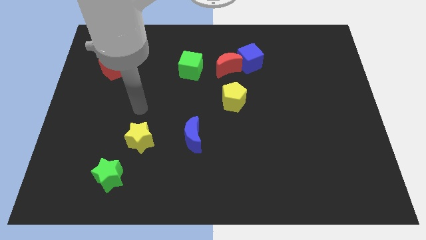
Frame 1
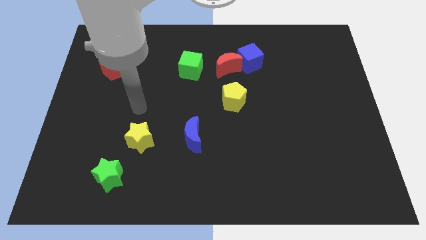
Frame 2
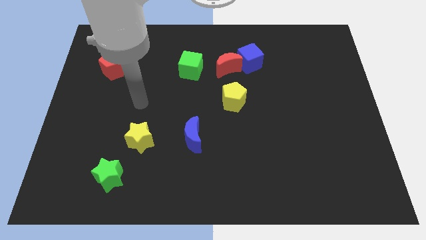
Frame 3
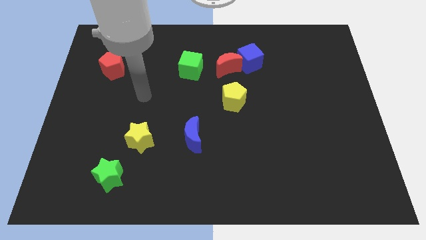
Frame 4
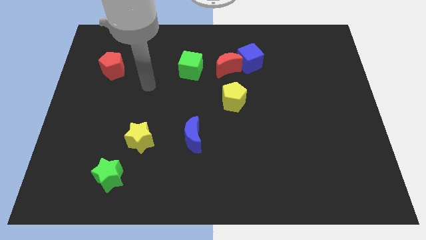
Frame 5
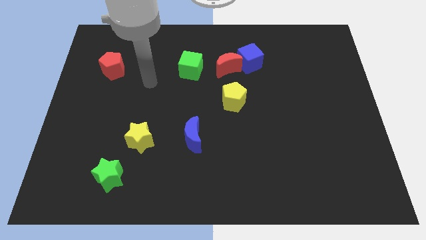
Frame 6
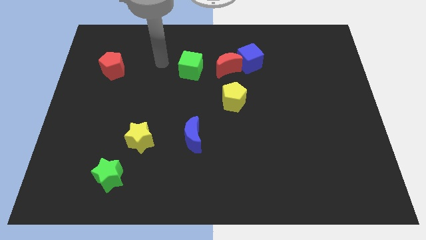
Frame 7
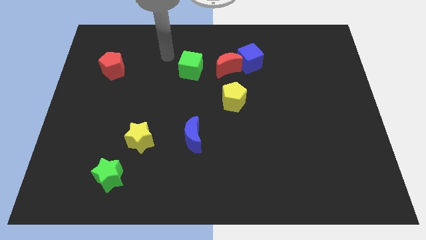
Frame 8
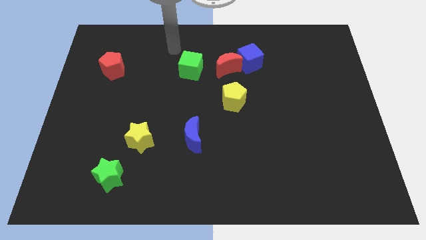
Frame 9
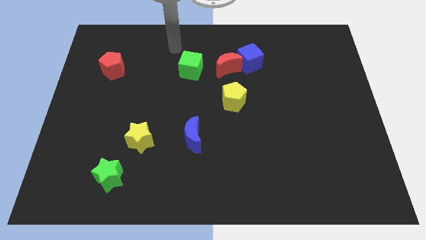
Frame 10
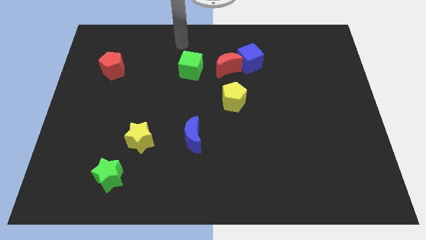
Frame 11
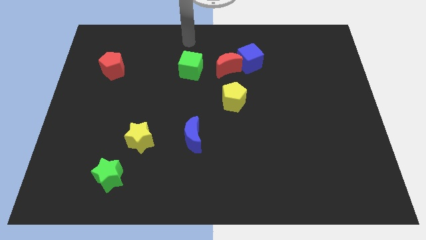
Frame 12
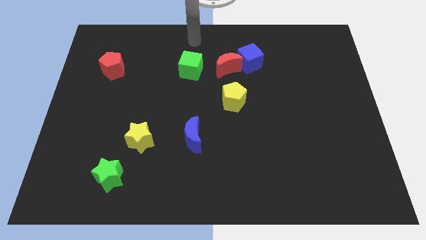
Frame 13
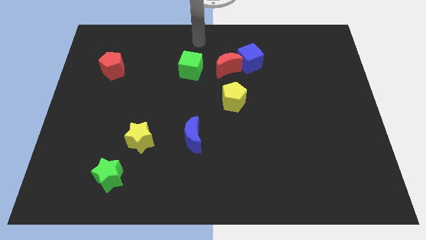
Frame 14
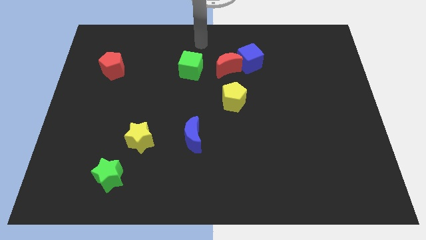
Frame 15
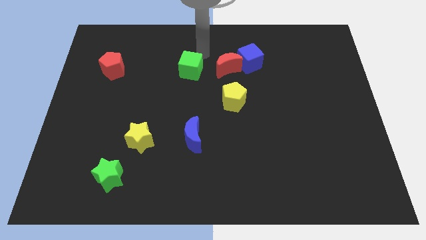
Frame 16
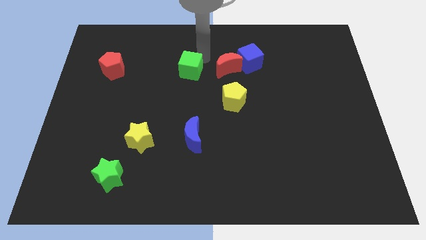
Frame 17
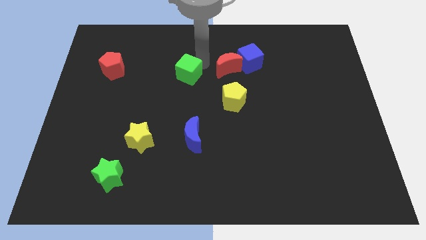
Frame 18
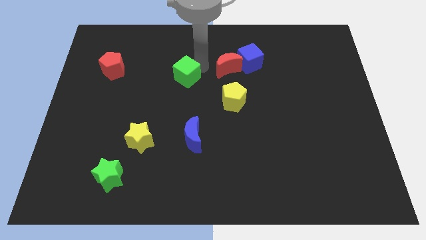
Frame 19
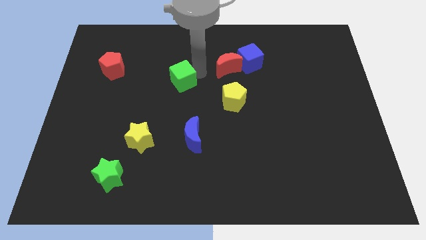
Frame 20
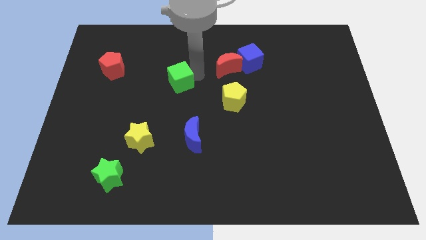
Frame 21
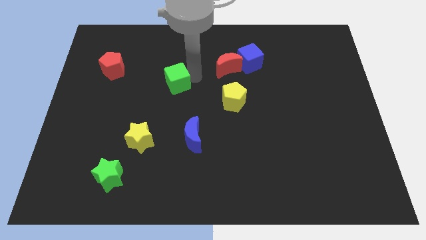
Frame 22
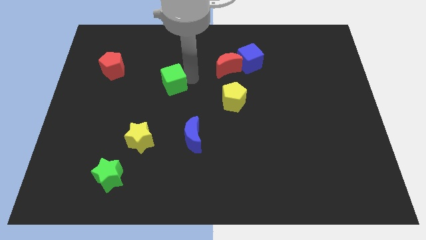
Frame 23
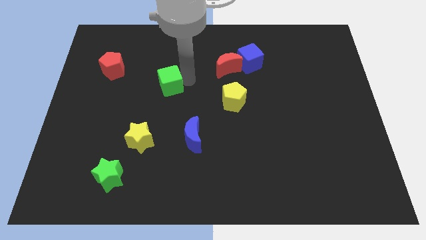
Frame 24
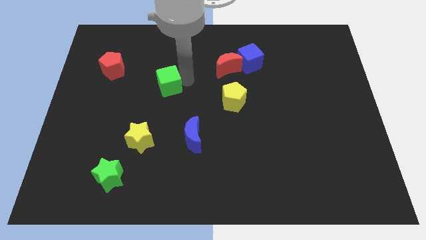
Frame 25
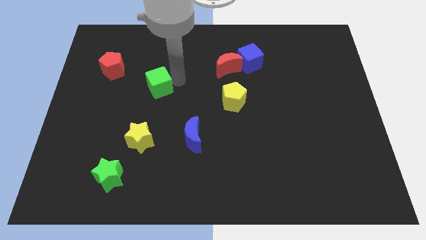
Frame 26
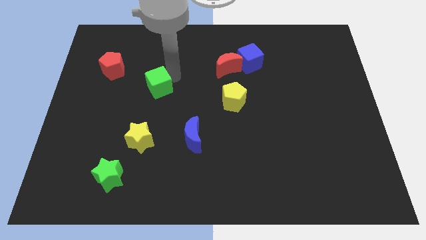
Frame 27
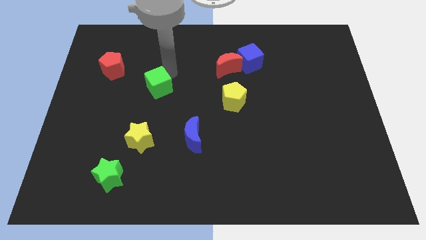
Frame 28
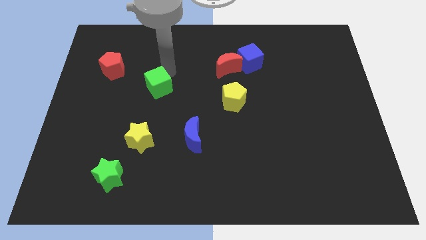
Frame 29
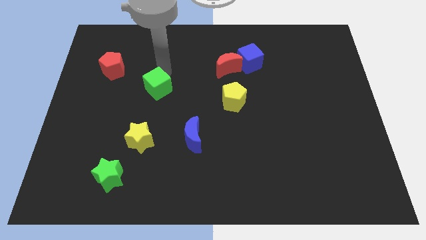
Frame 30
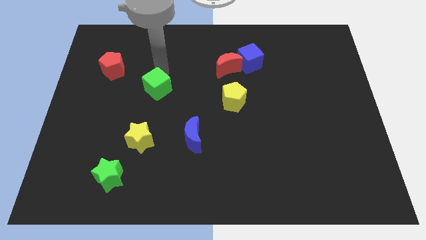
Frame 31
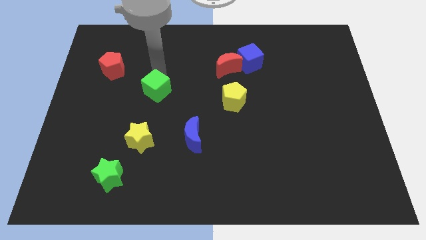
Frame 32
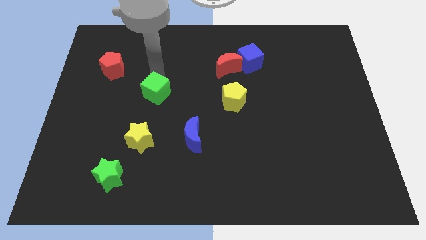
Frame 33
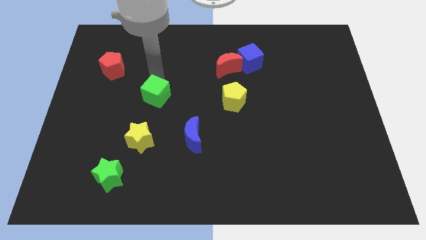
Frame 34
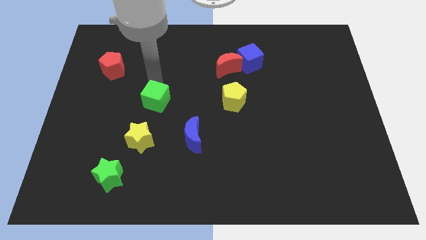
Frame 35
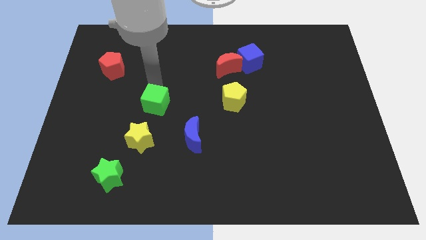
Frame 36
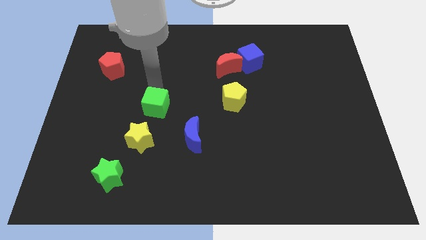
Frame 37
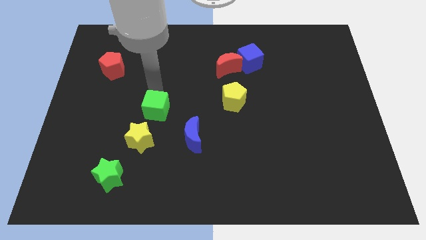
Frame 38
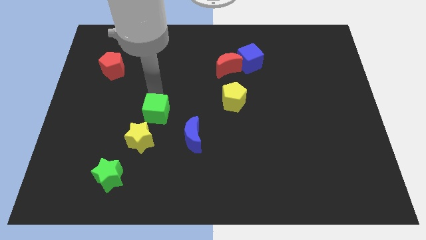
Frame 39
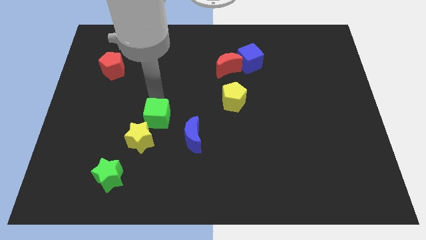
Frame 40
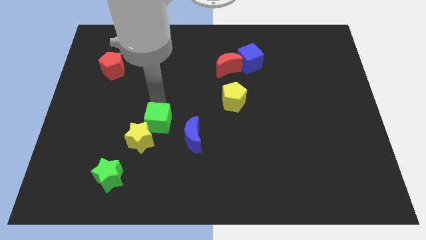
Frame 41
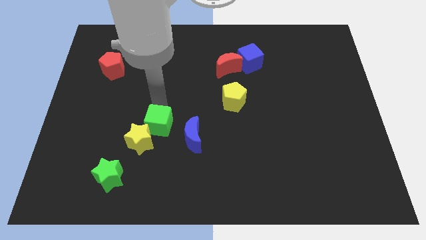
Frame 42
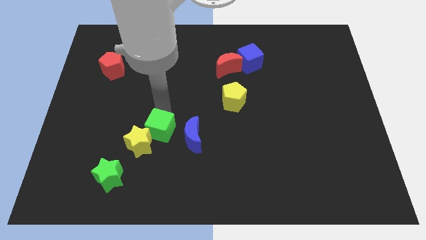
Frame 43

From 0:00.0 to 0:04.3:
push the green cube close to the yellow star

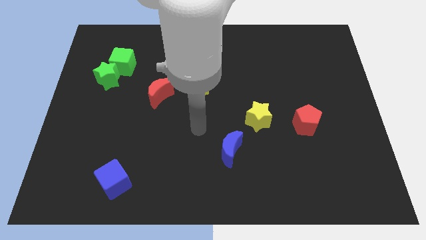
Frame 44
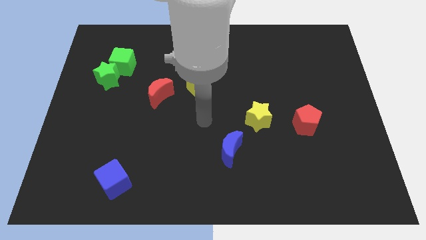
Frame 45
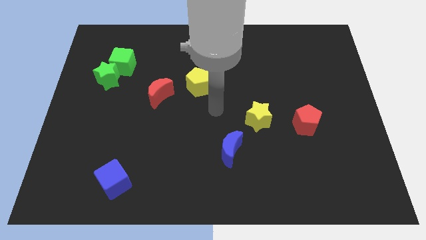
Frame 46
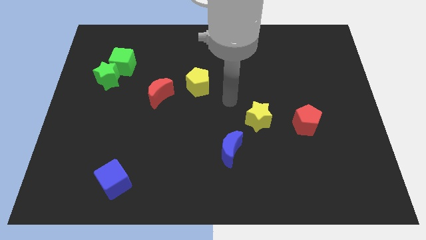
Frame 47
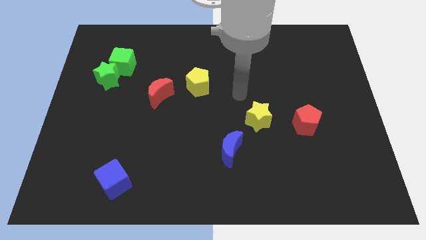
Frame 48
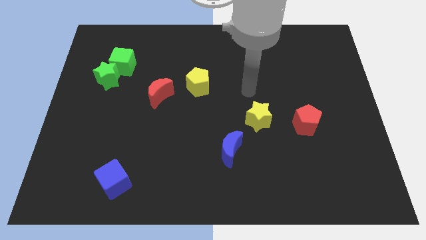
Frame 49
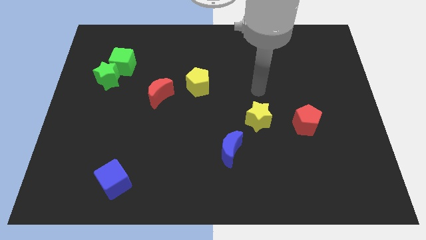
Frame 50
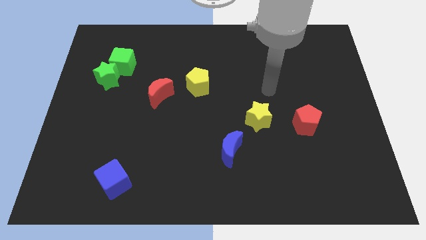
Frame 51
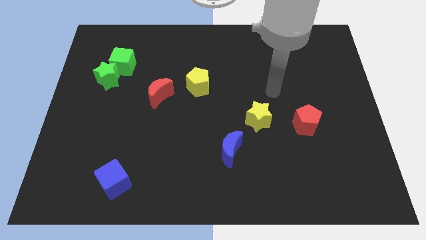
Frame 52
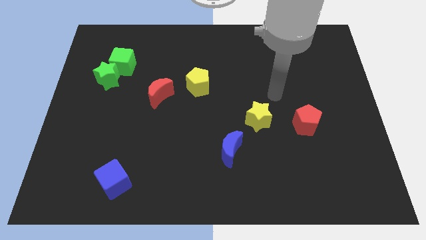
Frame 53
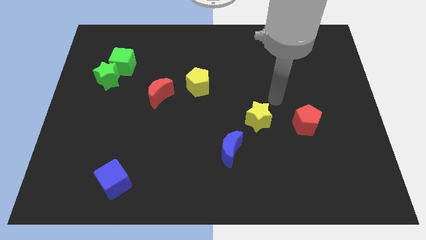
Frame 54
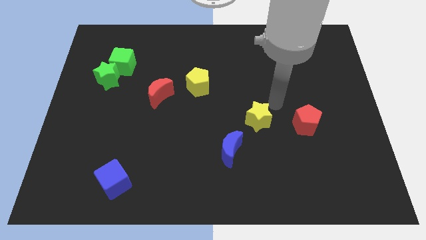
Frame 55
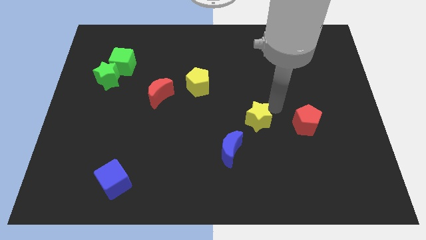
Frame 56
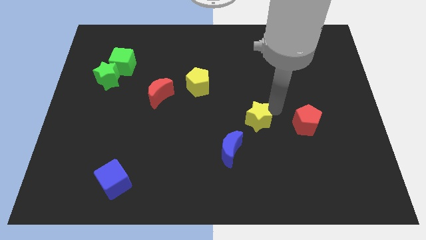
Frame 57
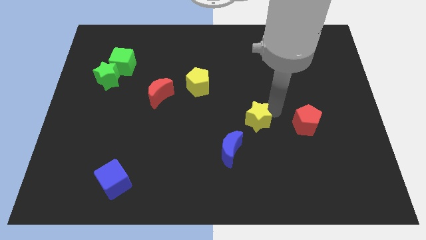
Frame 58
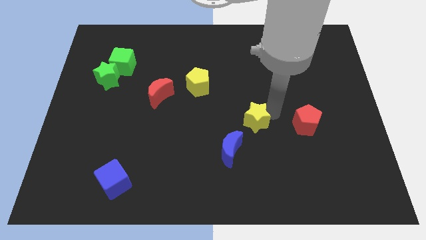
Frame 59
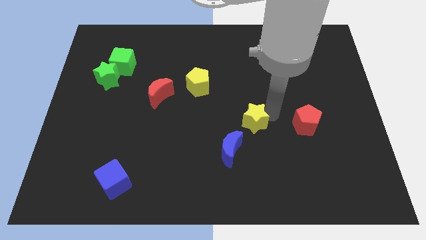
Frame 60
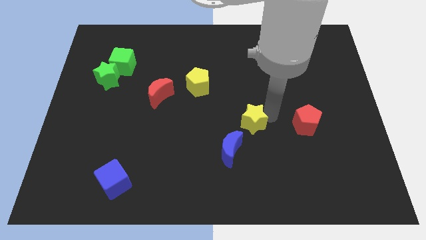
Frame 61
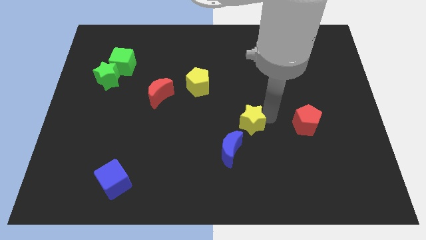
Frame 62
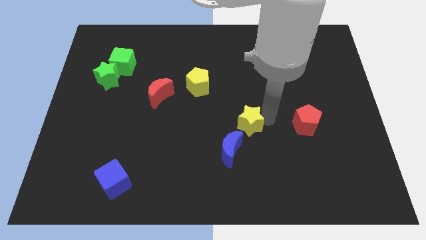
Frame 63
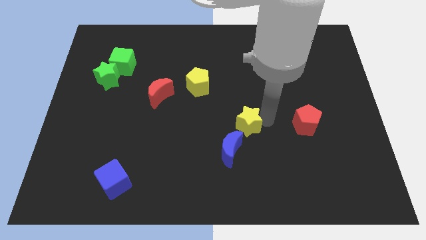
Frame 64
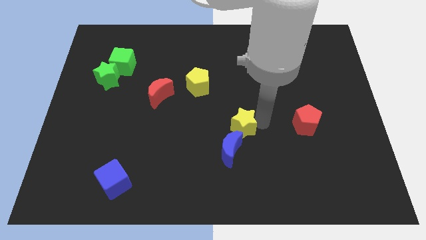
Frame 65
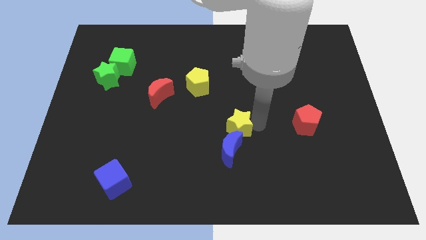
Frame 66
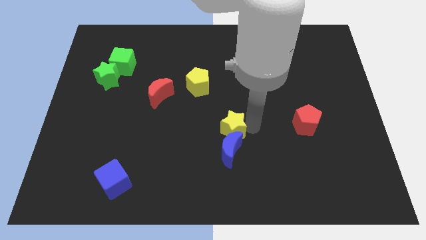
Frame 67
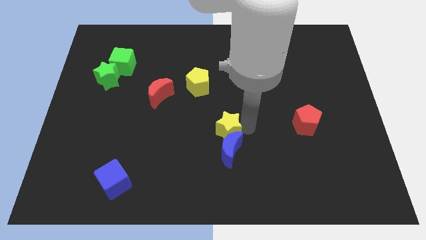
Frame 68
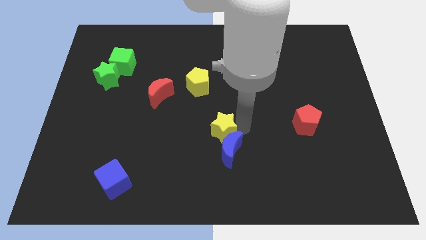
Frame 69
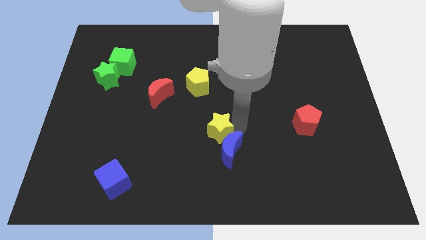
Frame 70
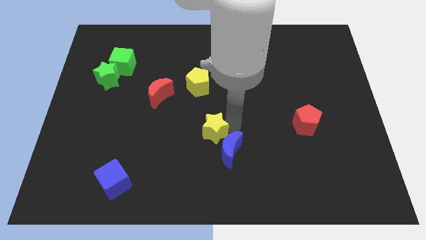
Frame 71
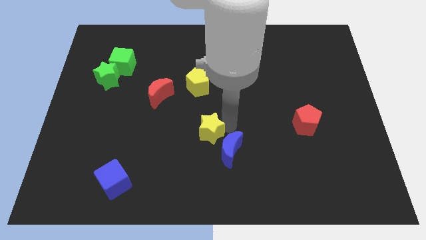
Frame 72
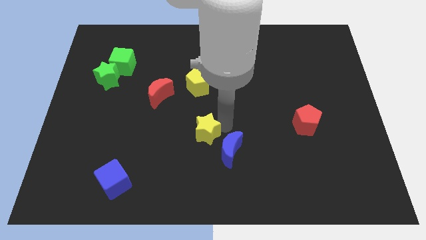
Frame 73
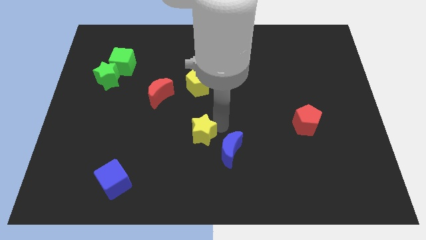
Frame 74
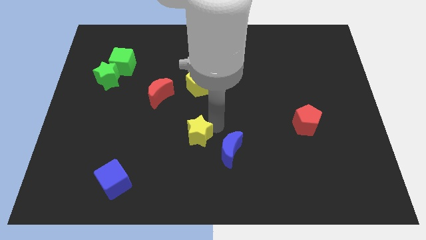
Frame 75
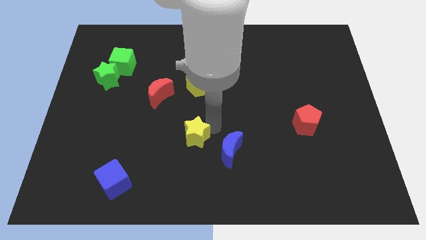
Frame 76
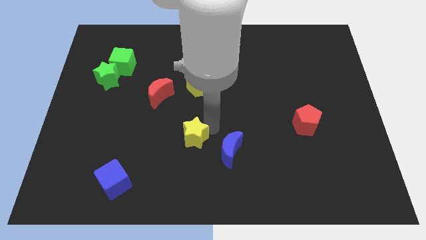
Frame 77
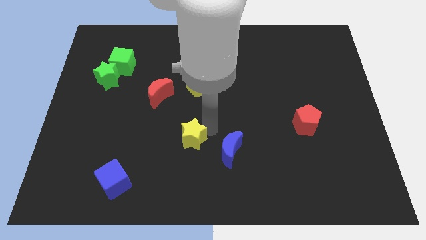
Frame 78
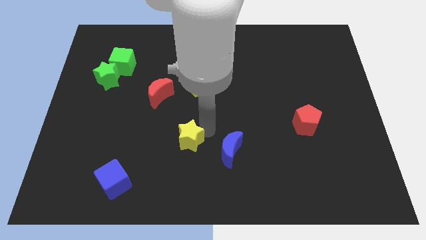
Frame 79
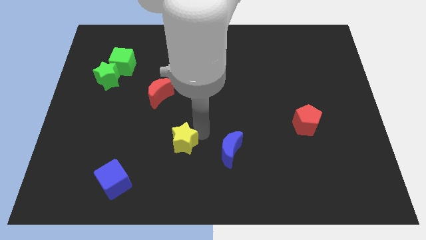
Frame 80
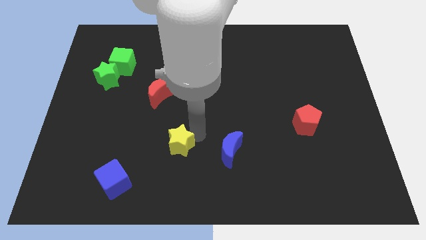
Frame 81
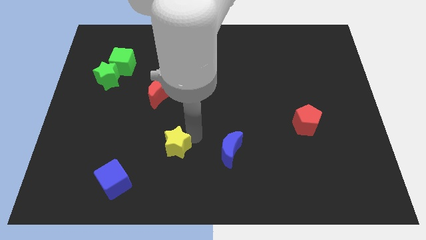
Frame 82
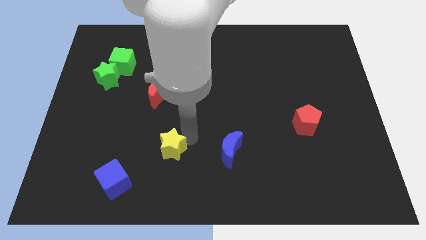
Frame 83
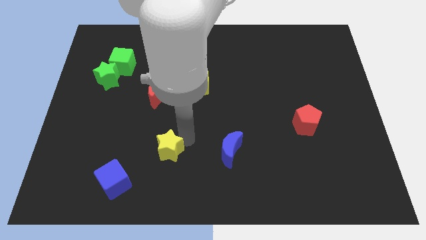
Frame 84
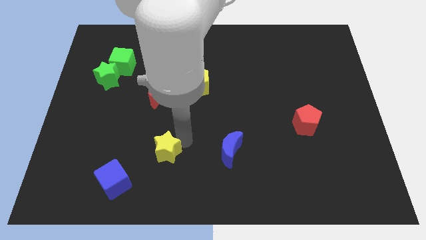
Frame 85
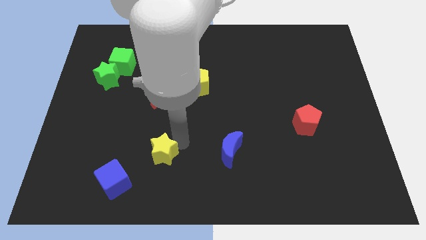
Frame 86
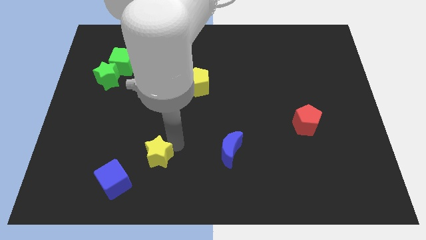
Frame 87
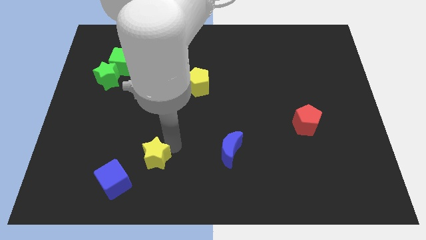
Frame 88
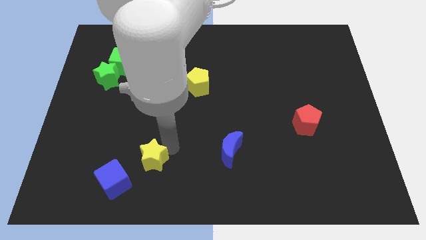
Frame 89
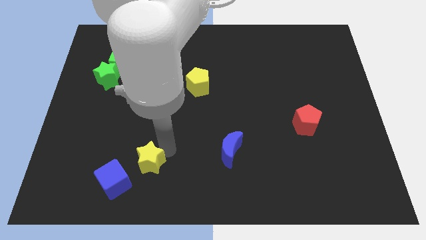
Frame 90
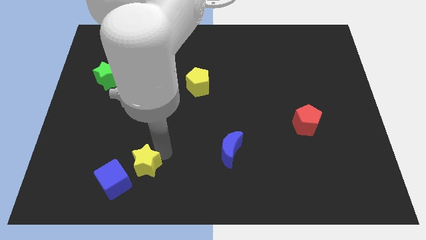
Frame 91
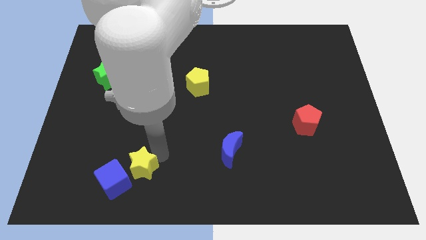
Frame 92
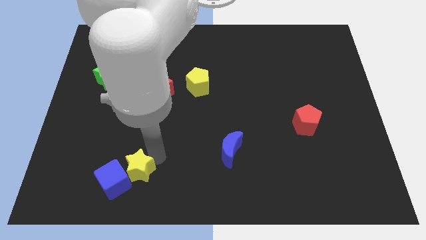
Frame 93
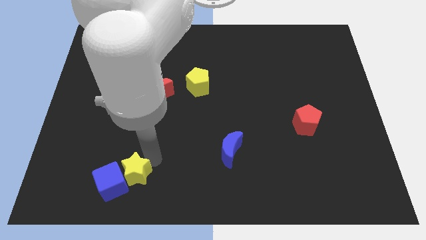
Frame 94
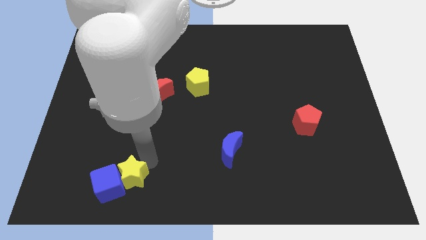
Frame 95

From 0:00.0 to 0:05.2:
move the yellow star towards the blue cube
